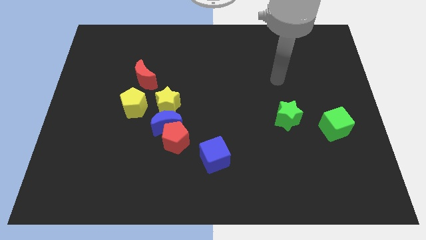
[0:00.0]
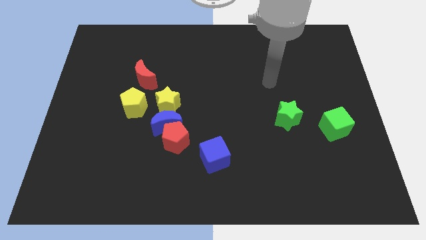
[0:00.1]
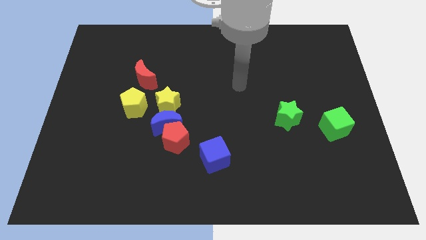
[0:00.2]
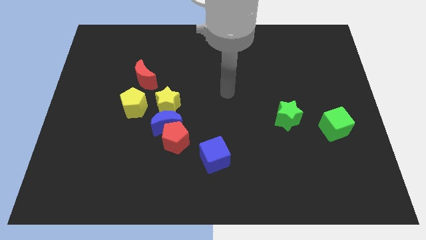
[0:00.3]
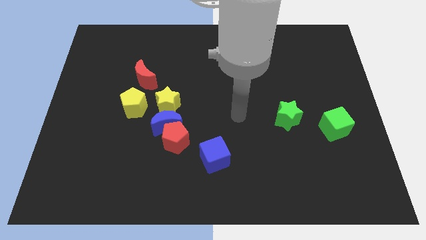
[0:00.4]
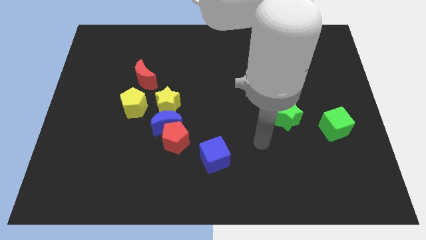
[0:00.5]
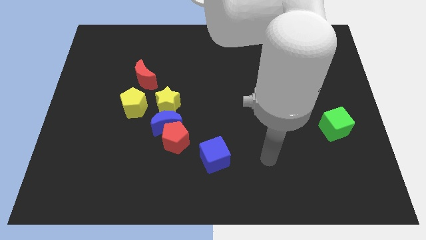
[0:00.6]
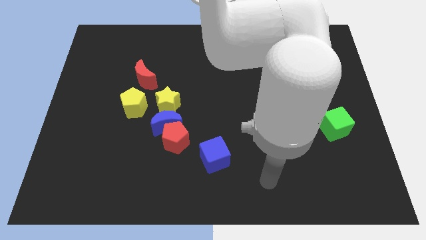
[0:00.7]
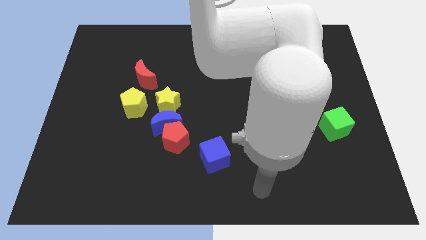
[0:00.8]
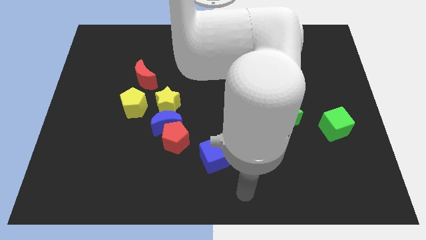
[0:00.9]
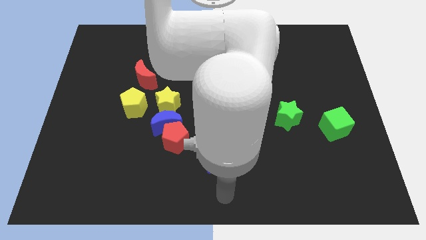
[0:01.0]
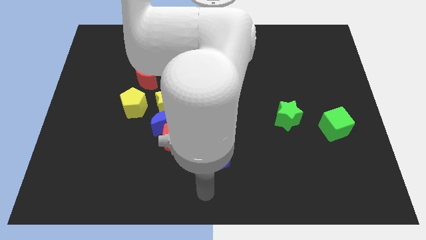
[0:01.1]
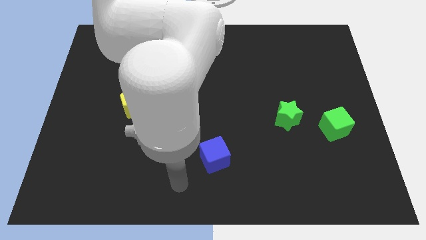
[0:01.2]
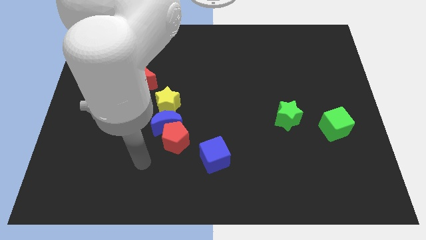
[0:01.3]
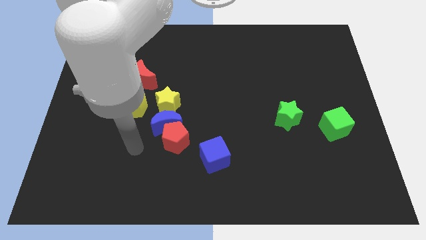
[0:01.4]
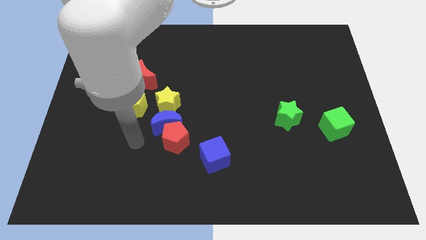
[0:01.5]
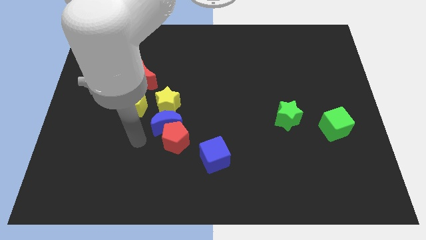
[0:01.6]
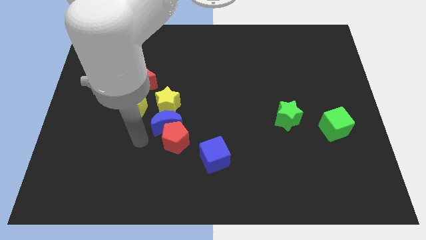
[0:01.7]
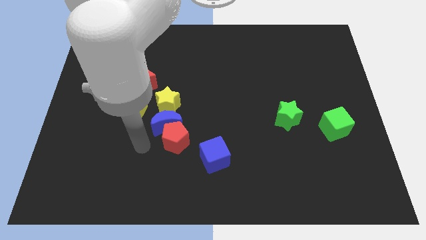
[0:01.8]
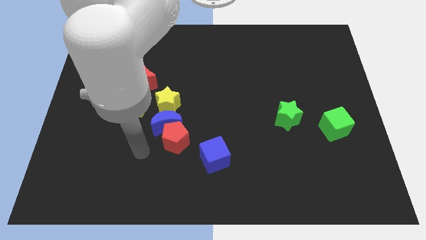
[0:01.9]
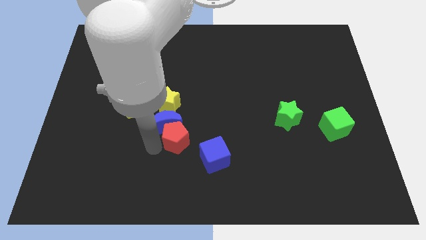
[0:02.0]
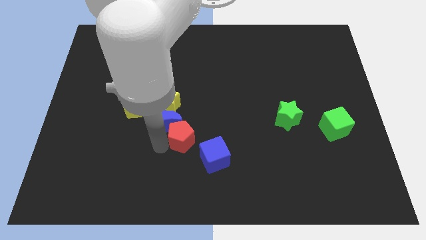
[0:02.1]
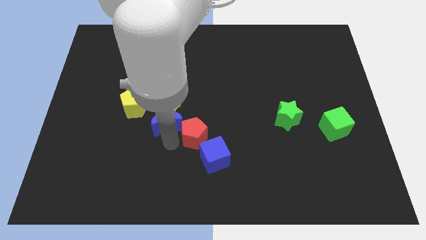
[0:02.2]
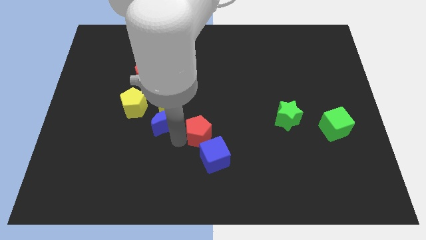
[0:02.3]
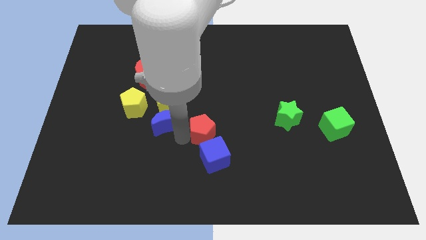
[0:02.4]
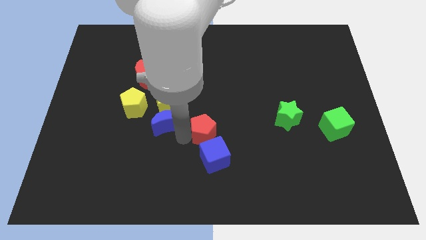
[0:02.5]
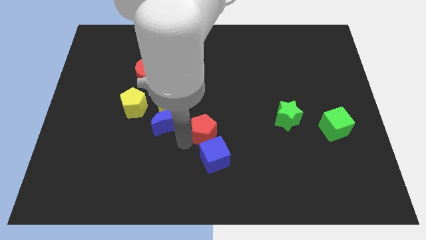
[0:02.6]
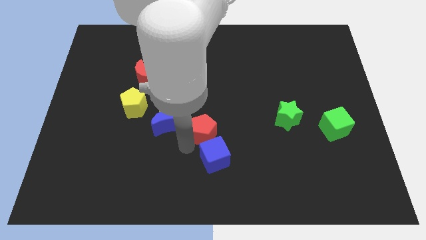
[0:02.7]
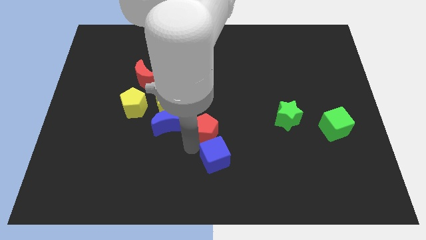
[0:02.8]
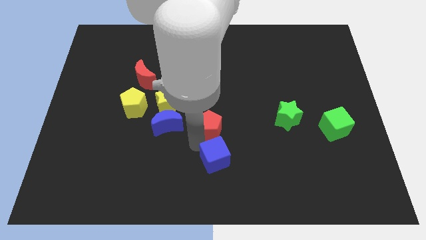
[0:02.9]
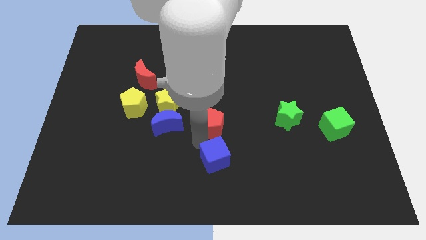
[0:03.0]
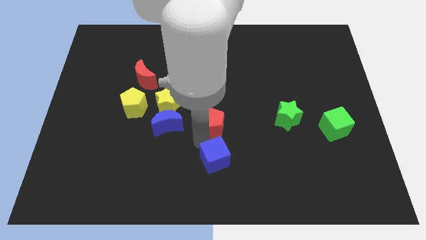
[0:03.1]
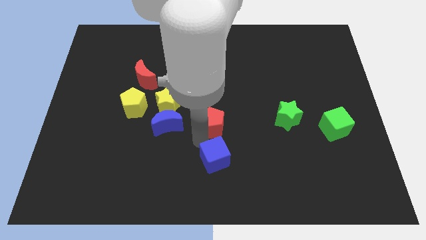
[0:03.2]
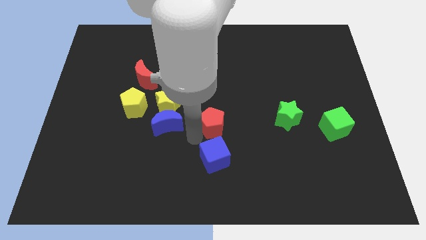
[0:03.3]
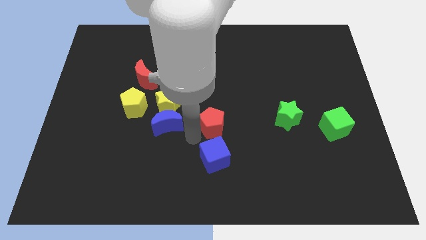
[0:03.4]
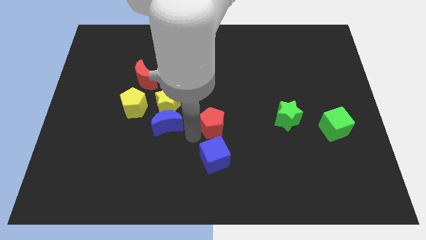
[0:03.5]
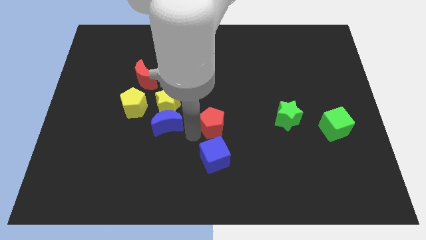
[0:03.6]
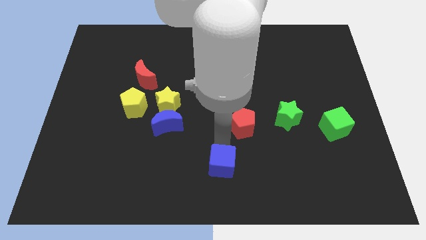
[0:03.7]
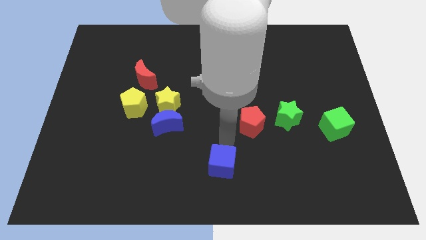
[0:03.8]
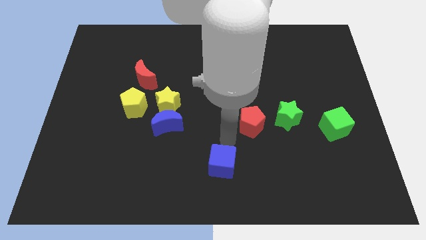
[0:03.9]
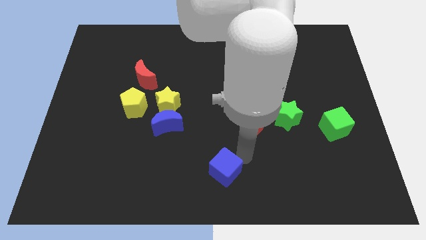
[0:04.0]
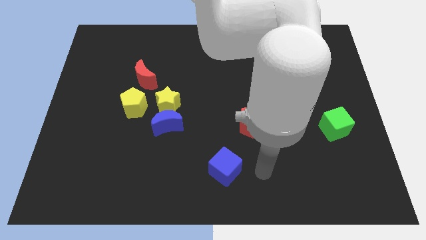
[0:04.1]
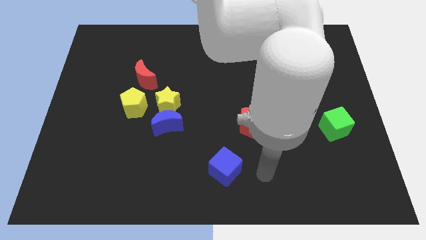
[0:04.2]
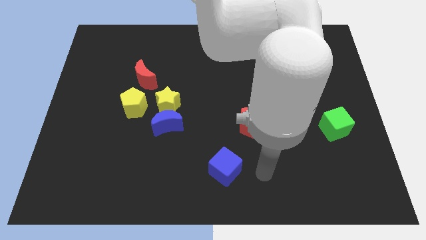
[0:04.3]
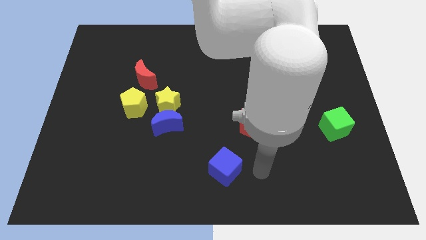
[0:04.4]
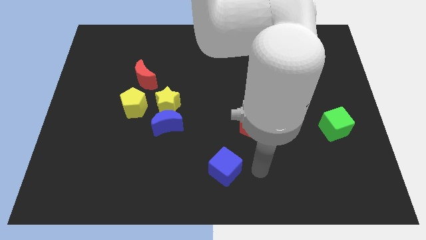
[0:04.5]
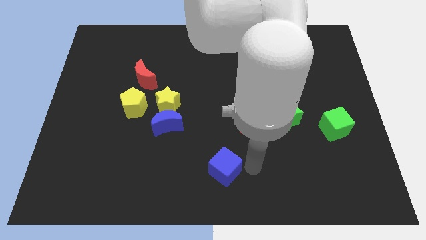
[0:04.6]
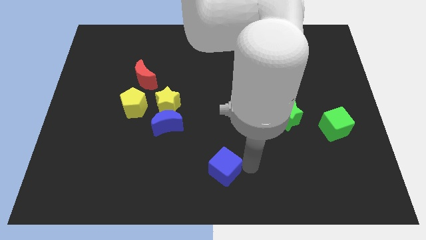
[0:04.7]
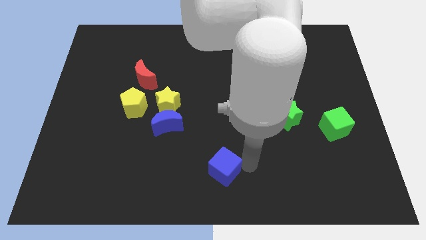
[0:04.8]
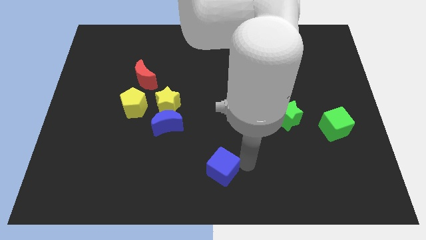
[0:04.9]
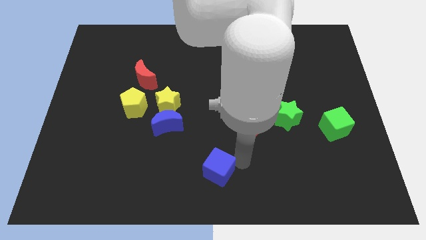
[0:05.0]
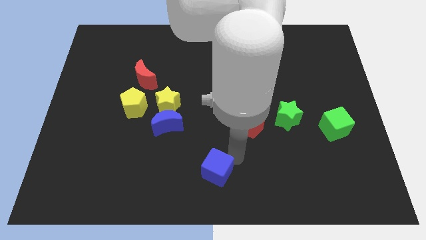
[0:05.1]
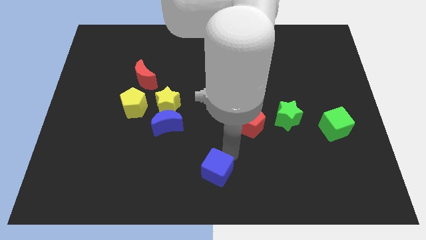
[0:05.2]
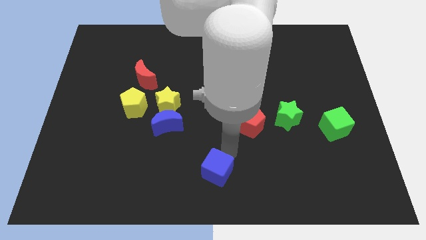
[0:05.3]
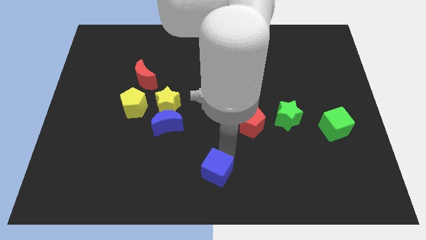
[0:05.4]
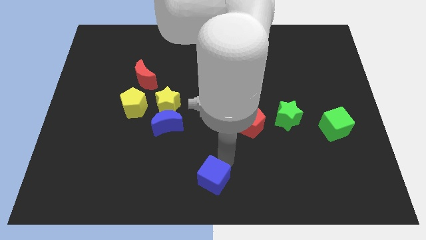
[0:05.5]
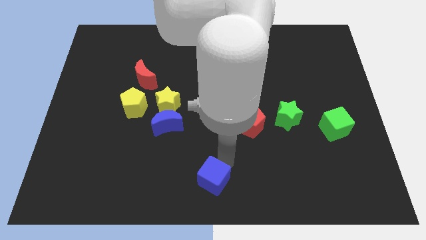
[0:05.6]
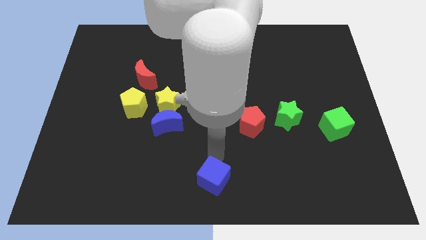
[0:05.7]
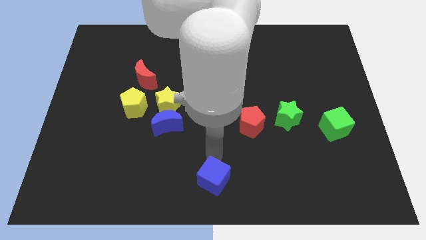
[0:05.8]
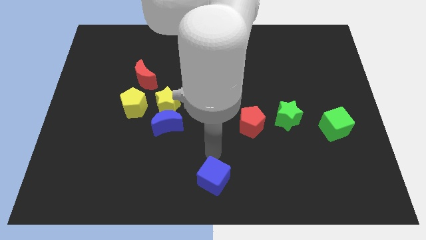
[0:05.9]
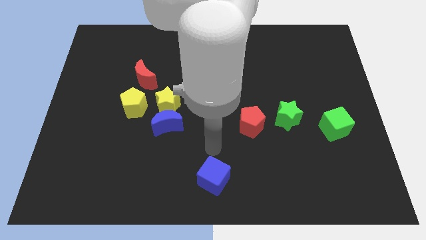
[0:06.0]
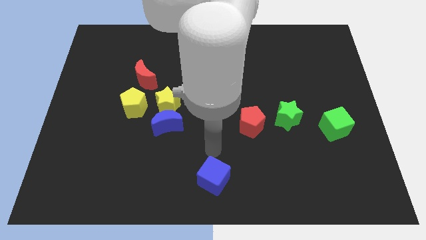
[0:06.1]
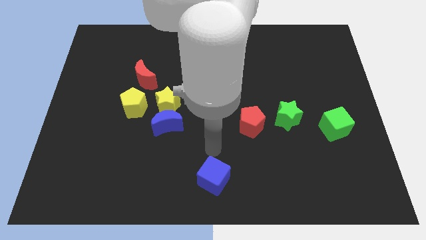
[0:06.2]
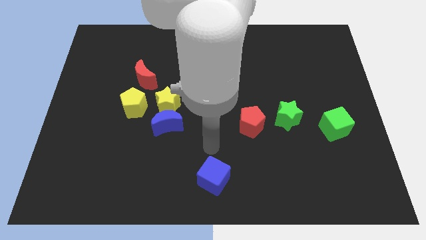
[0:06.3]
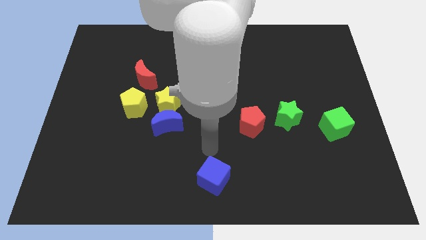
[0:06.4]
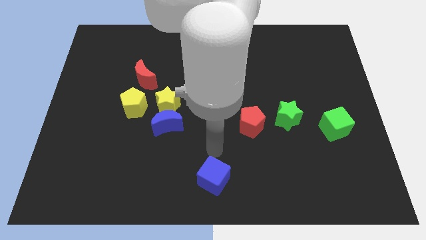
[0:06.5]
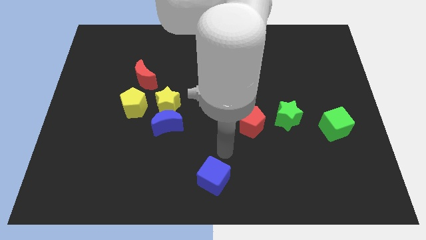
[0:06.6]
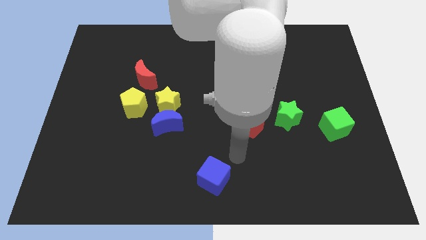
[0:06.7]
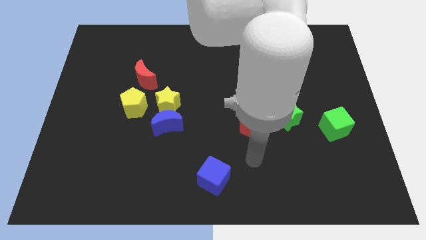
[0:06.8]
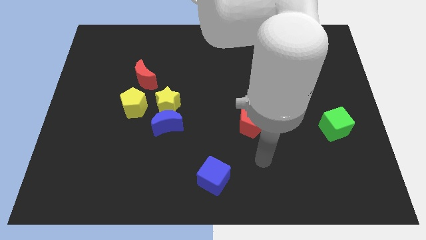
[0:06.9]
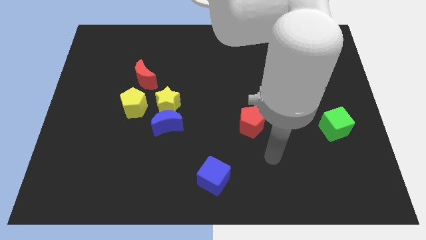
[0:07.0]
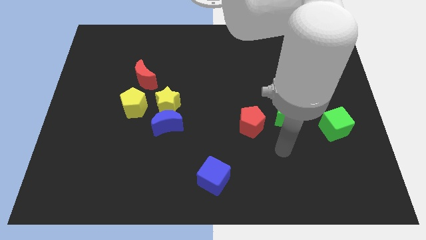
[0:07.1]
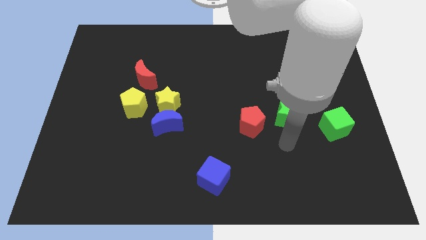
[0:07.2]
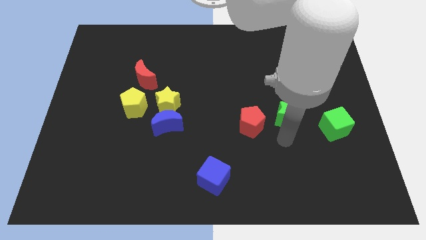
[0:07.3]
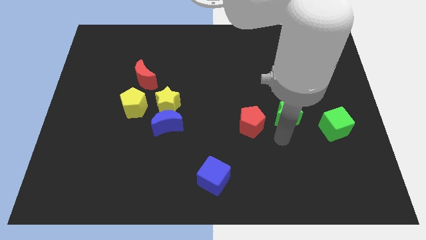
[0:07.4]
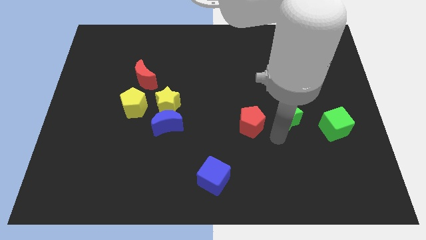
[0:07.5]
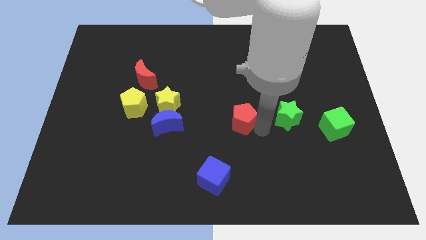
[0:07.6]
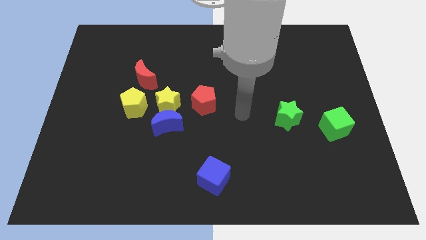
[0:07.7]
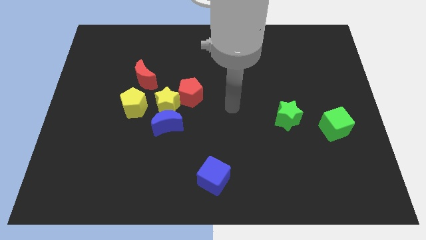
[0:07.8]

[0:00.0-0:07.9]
push the red pentagon to the yellow star

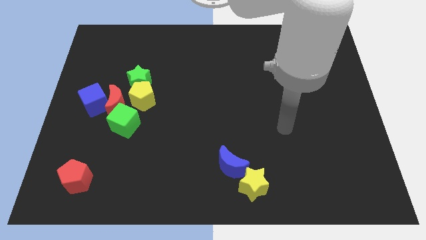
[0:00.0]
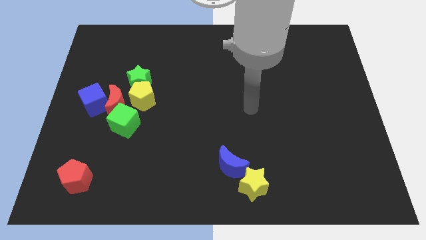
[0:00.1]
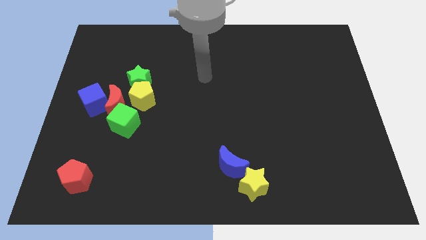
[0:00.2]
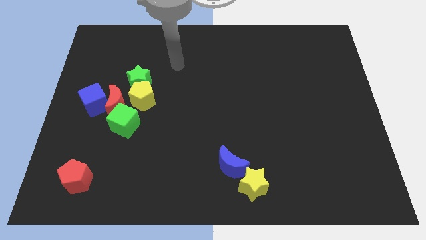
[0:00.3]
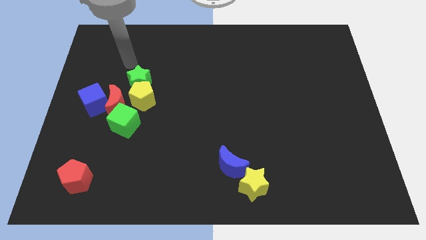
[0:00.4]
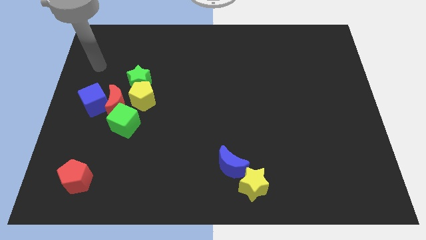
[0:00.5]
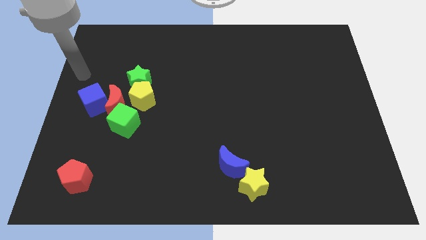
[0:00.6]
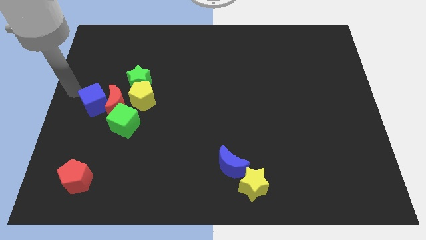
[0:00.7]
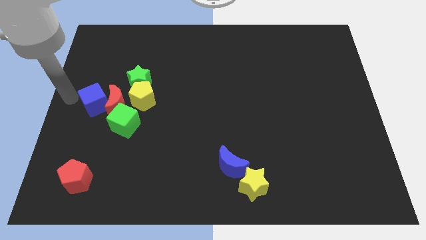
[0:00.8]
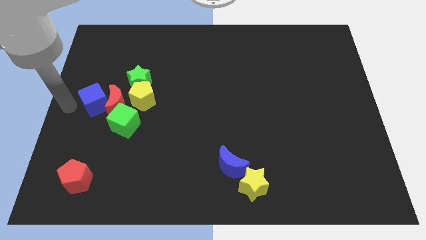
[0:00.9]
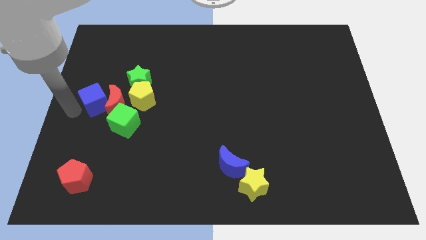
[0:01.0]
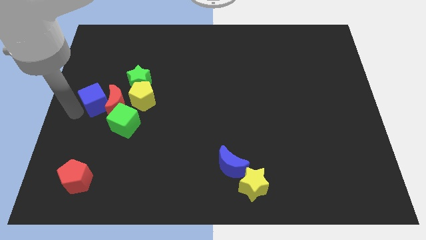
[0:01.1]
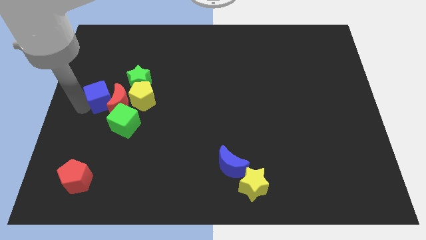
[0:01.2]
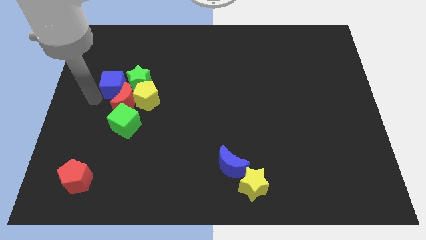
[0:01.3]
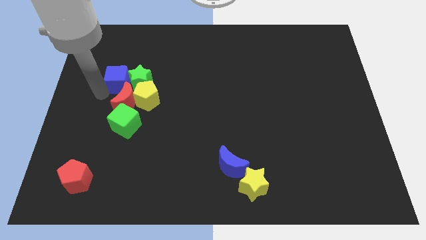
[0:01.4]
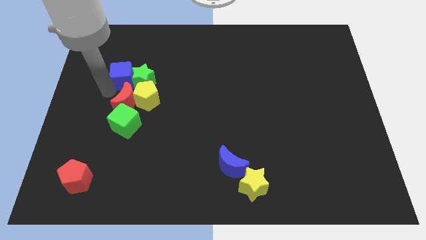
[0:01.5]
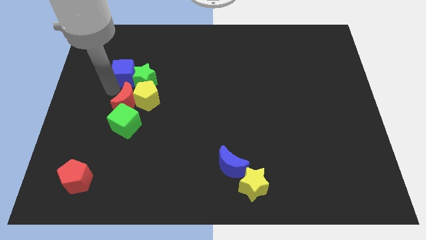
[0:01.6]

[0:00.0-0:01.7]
push the blue cube towards the green star
